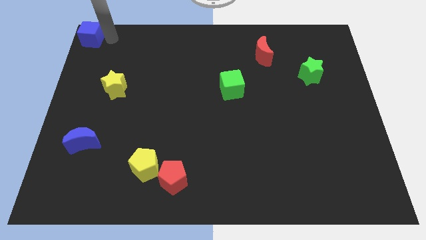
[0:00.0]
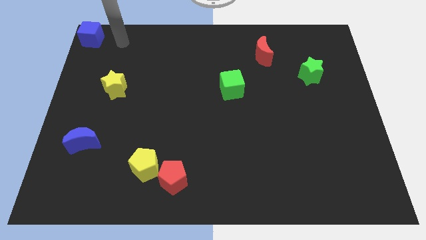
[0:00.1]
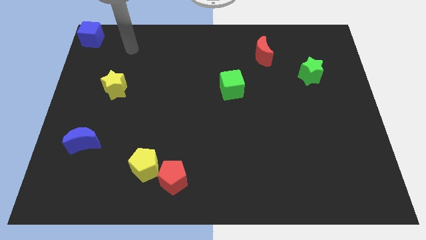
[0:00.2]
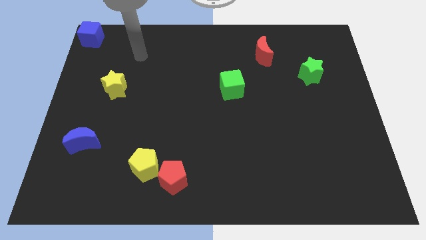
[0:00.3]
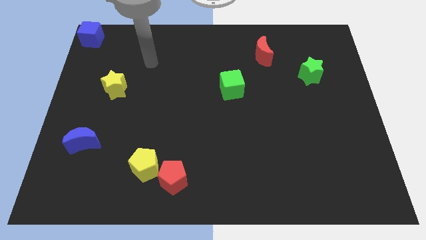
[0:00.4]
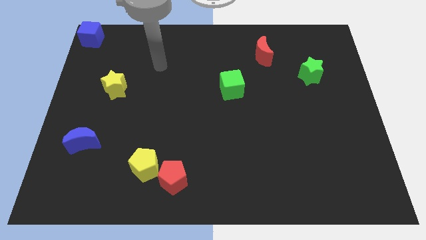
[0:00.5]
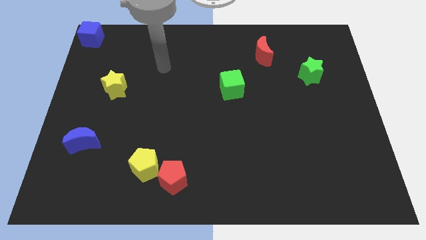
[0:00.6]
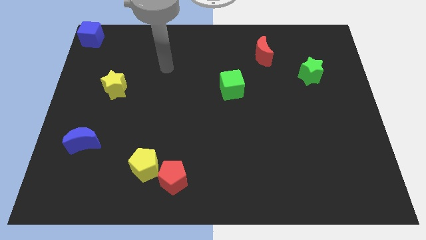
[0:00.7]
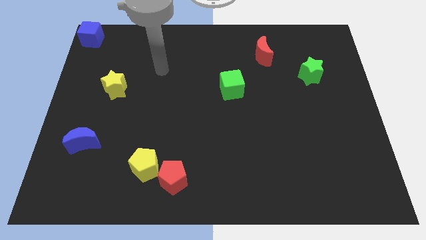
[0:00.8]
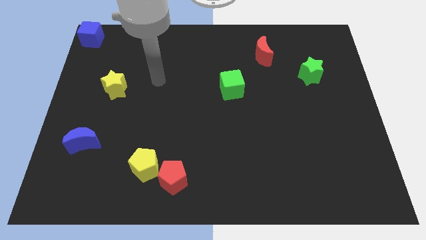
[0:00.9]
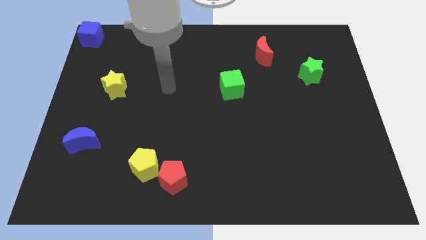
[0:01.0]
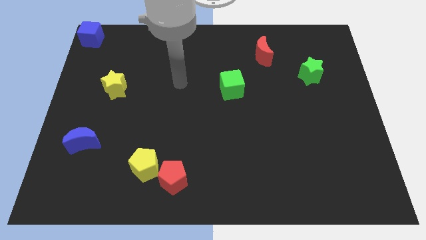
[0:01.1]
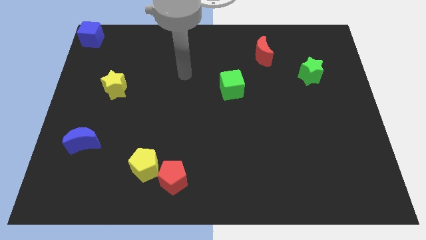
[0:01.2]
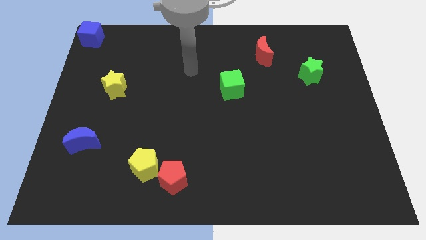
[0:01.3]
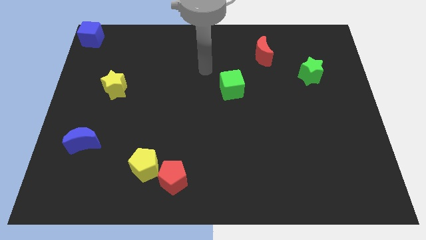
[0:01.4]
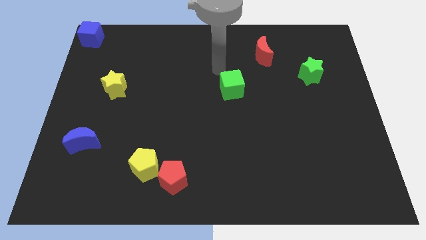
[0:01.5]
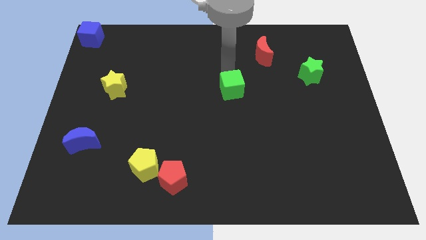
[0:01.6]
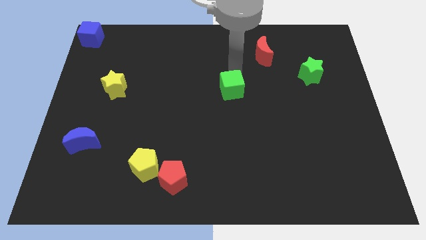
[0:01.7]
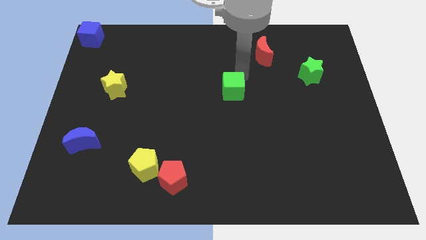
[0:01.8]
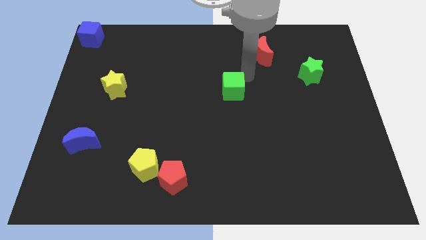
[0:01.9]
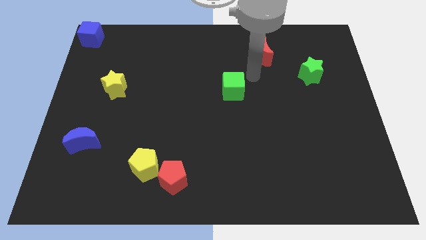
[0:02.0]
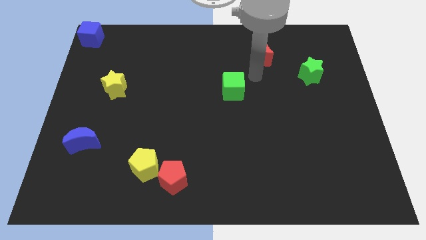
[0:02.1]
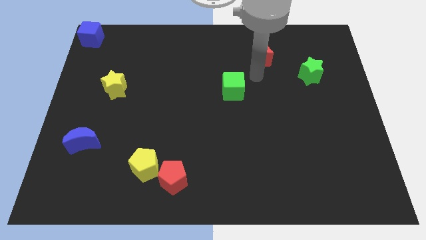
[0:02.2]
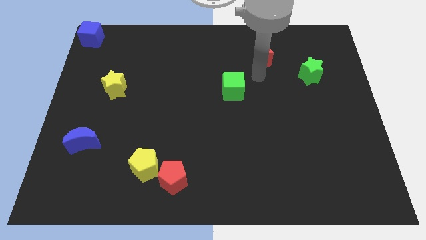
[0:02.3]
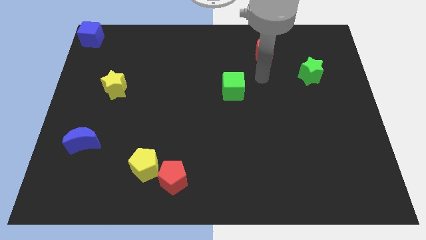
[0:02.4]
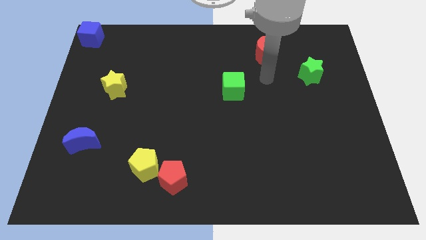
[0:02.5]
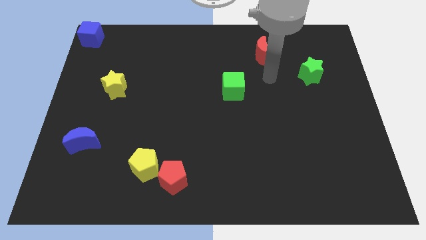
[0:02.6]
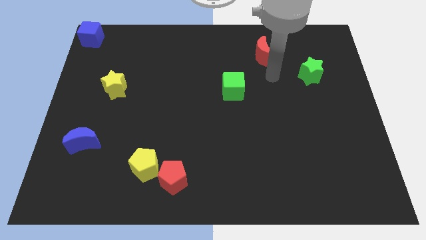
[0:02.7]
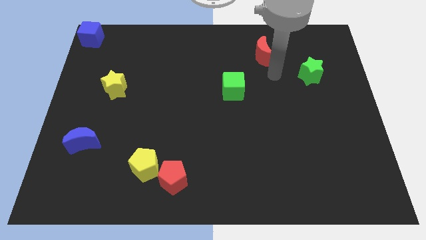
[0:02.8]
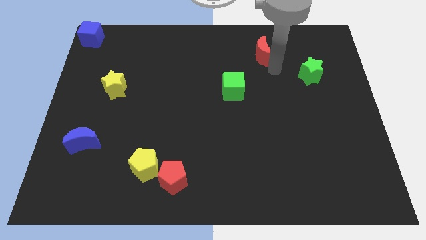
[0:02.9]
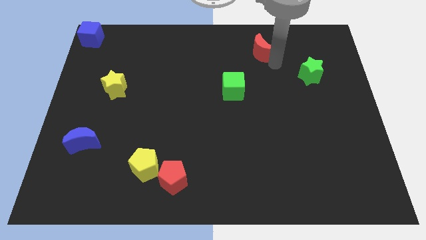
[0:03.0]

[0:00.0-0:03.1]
touch the red moon

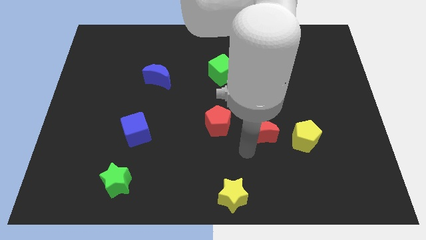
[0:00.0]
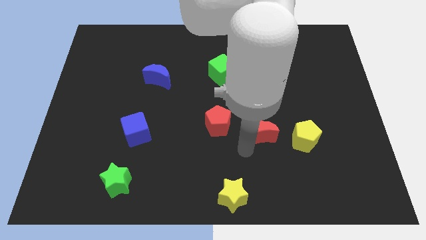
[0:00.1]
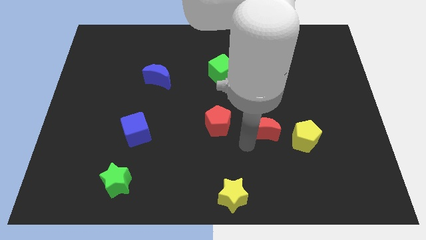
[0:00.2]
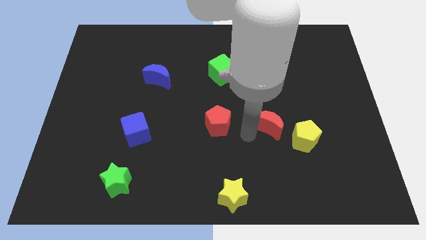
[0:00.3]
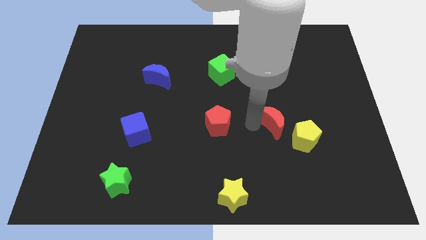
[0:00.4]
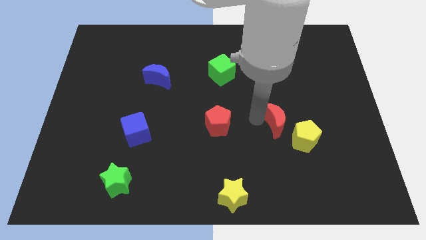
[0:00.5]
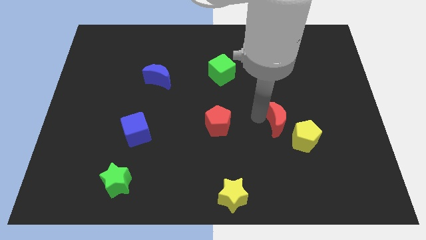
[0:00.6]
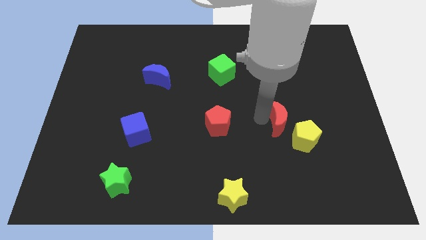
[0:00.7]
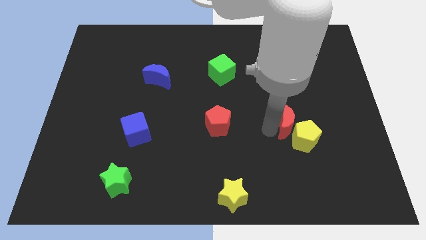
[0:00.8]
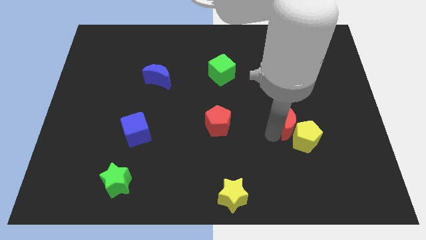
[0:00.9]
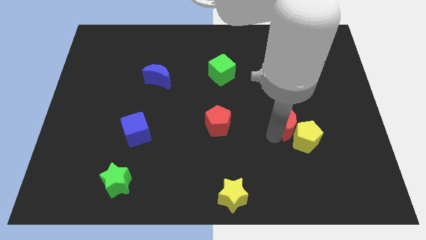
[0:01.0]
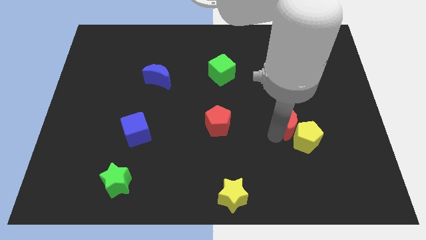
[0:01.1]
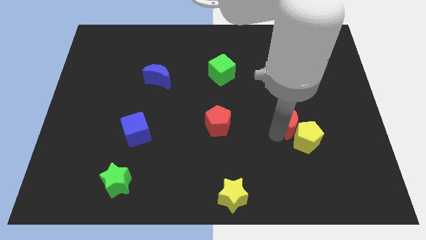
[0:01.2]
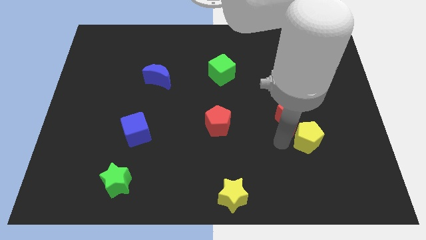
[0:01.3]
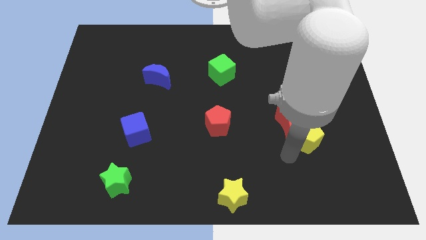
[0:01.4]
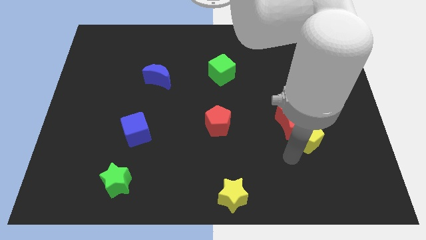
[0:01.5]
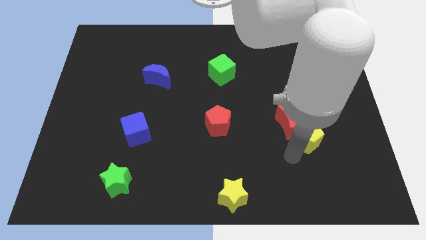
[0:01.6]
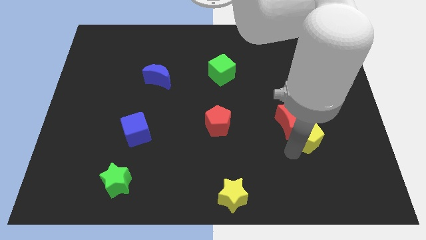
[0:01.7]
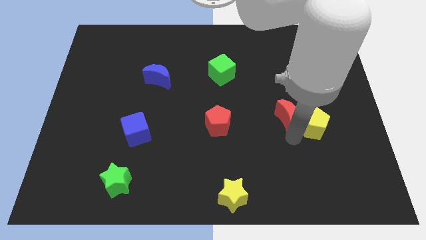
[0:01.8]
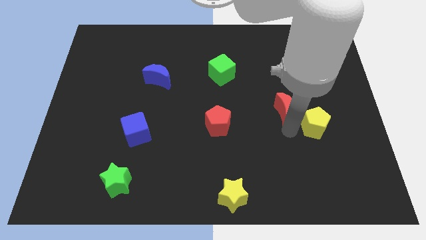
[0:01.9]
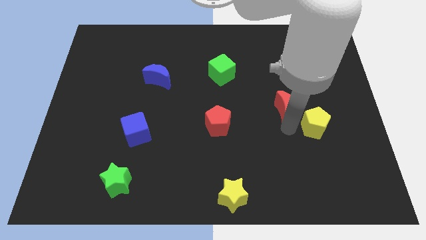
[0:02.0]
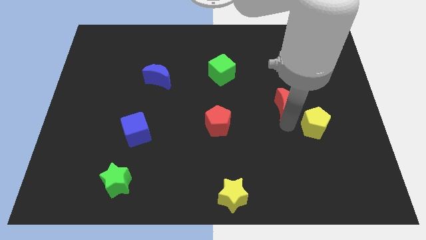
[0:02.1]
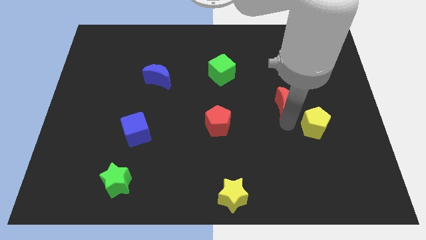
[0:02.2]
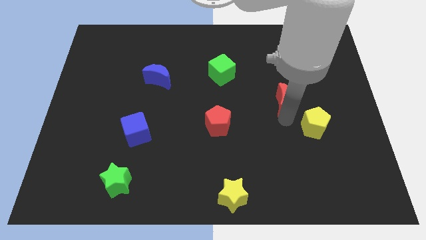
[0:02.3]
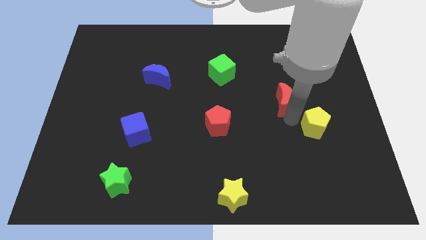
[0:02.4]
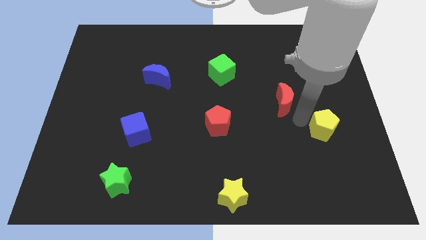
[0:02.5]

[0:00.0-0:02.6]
move the red moon above to the yellow pentagon

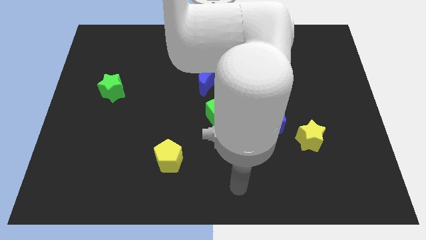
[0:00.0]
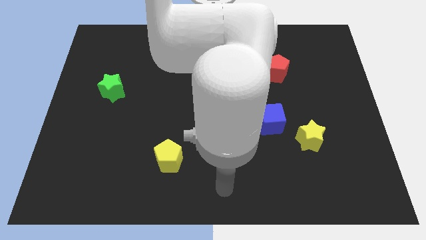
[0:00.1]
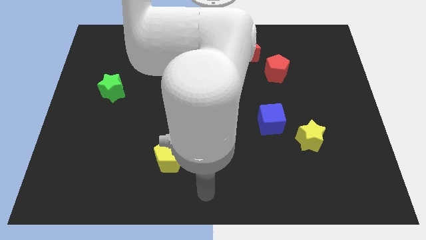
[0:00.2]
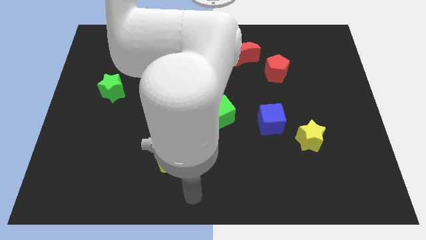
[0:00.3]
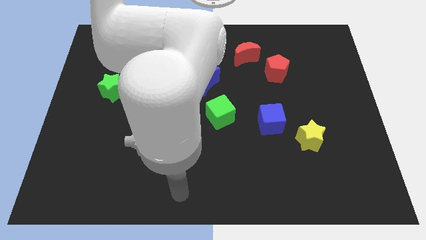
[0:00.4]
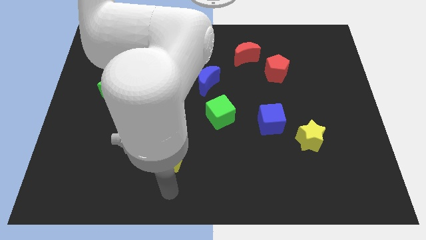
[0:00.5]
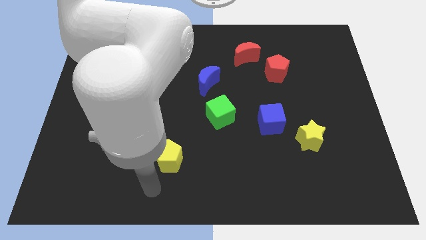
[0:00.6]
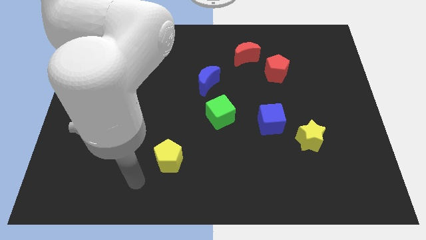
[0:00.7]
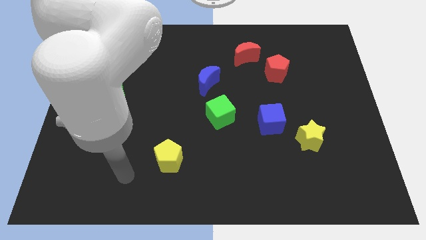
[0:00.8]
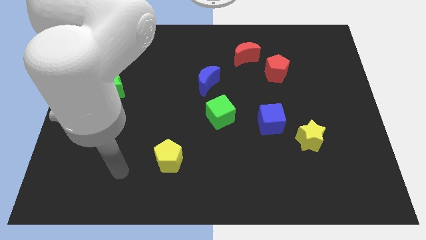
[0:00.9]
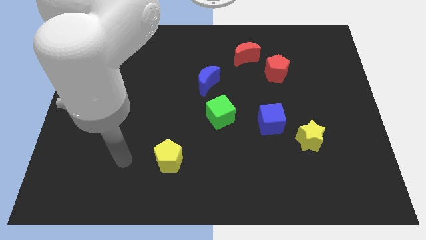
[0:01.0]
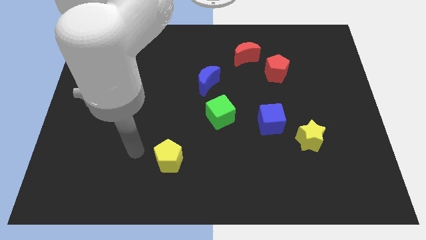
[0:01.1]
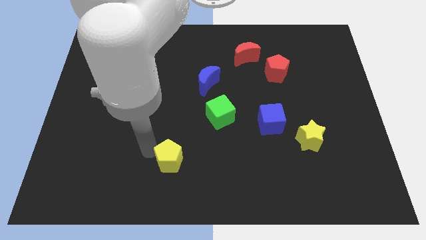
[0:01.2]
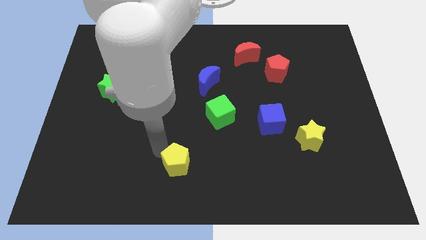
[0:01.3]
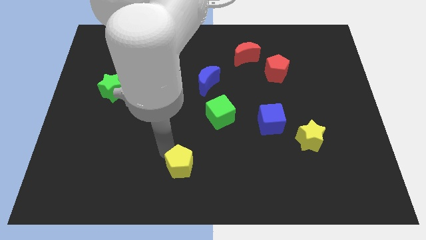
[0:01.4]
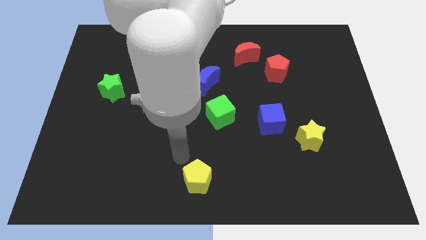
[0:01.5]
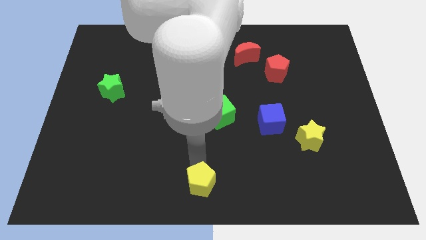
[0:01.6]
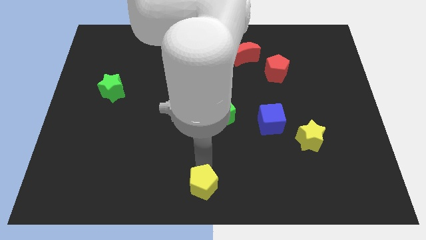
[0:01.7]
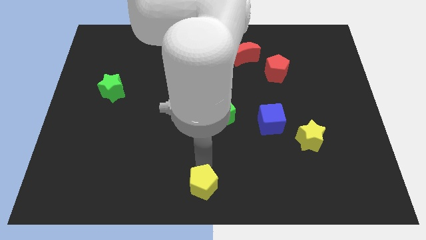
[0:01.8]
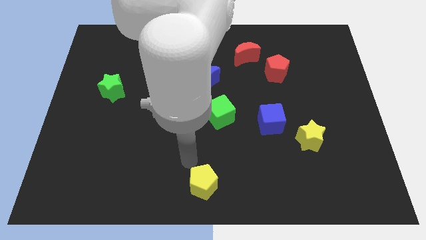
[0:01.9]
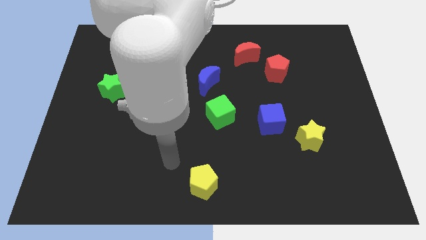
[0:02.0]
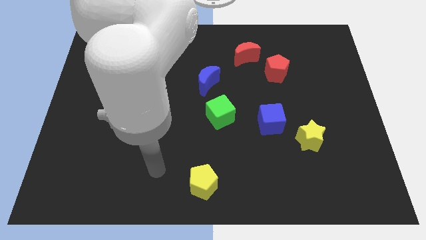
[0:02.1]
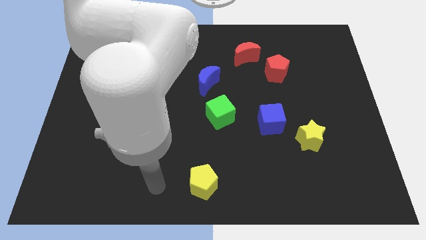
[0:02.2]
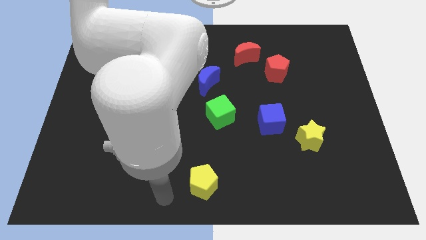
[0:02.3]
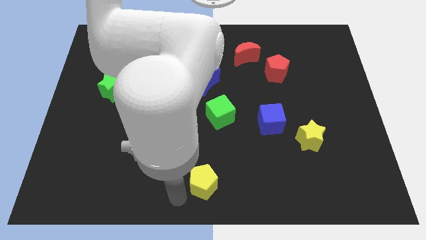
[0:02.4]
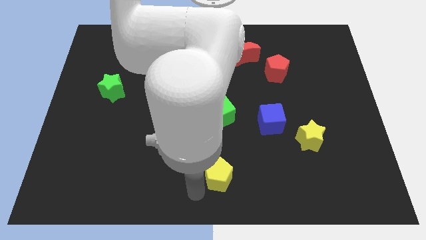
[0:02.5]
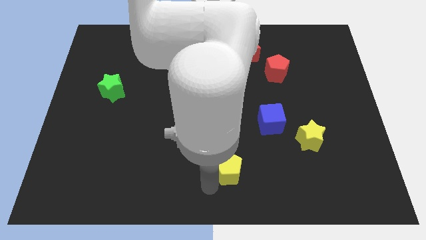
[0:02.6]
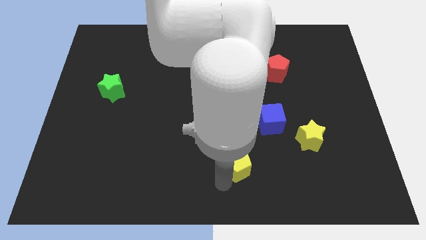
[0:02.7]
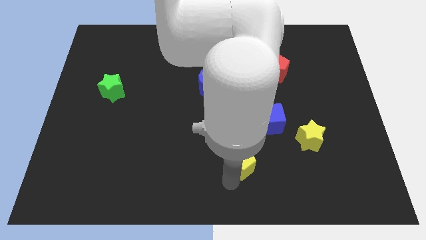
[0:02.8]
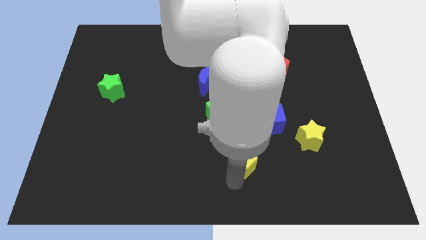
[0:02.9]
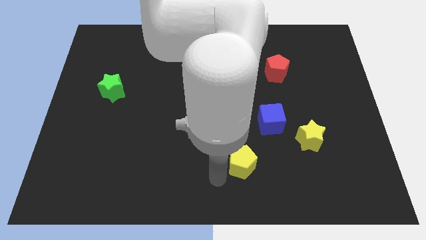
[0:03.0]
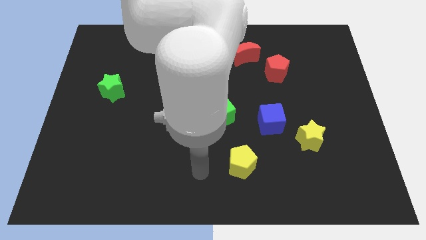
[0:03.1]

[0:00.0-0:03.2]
move yellow pentagon diagonal to blue cube
